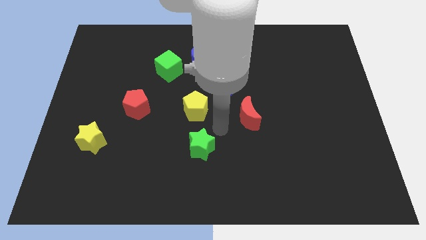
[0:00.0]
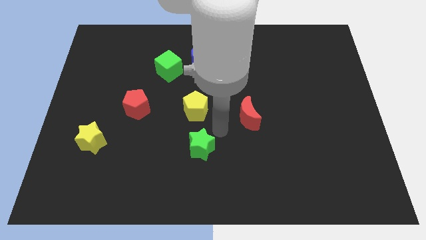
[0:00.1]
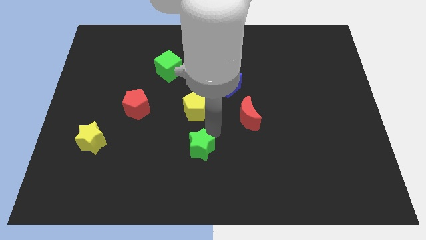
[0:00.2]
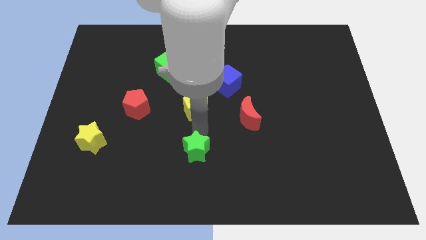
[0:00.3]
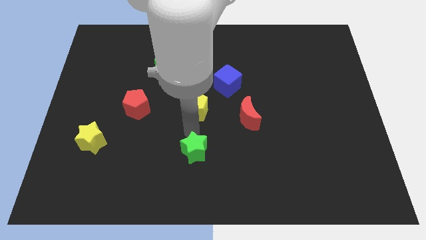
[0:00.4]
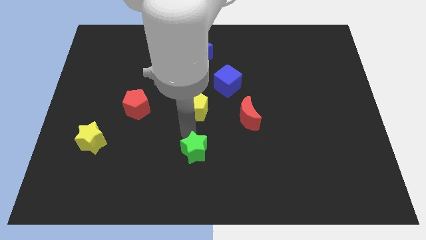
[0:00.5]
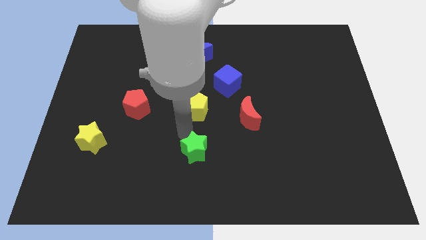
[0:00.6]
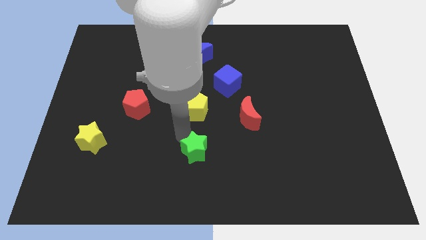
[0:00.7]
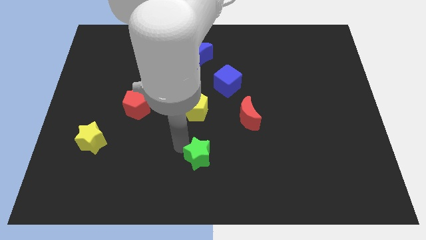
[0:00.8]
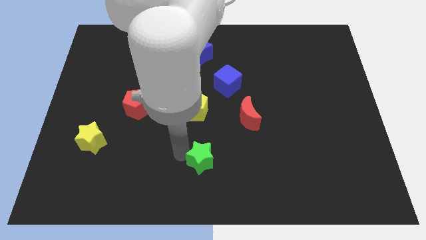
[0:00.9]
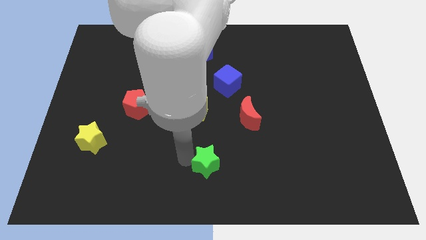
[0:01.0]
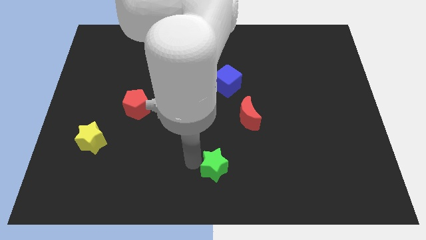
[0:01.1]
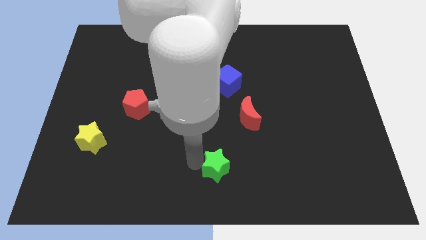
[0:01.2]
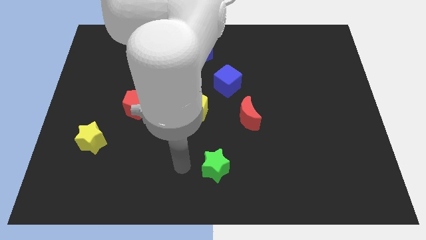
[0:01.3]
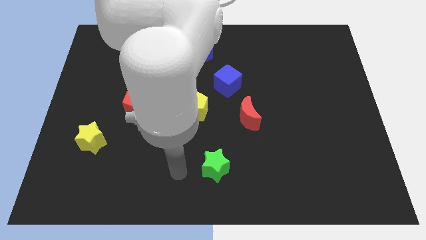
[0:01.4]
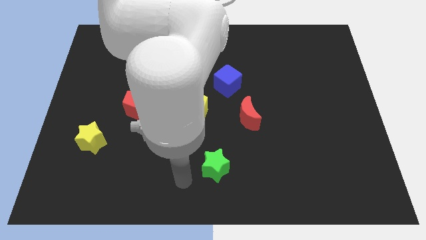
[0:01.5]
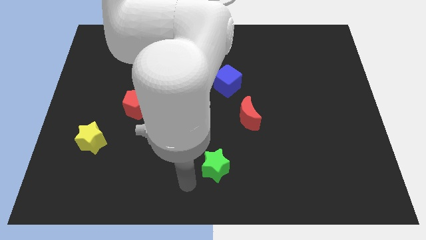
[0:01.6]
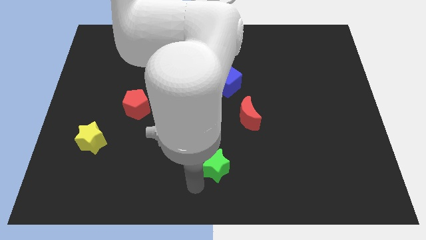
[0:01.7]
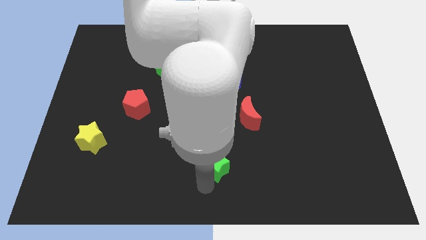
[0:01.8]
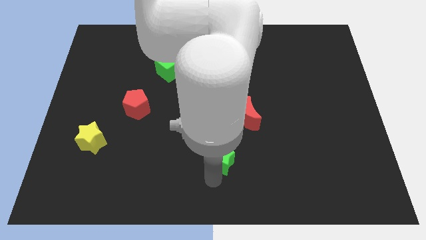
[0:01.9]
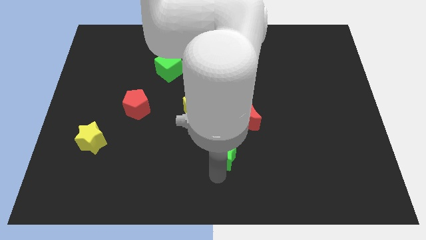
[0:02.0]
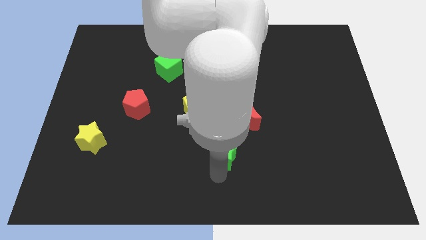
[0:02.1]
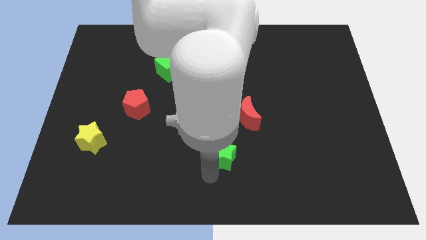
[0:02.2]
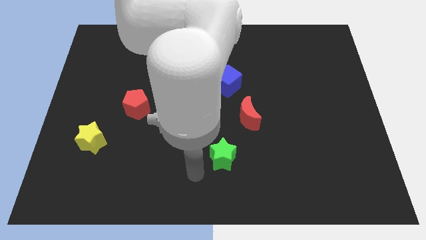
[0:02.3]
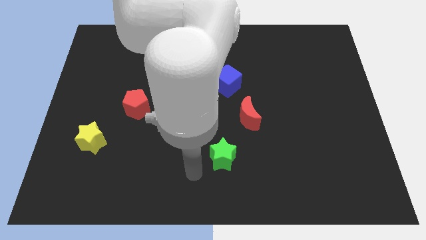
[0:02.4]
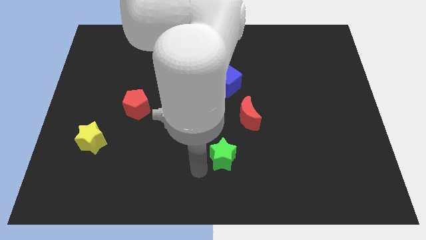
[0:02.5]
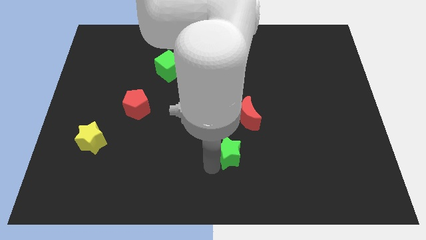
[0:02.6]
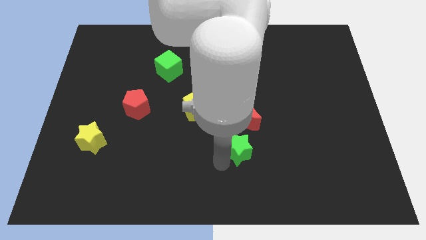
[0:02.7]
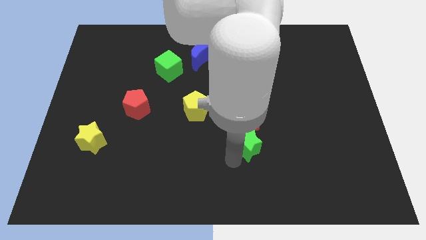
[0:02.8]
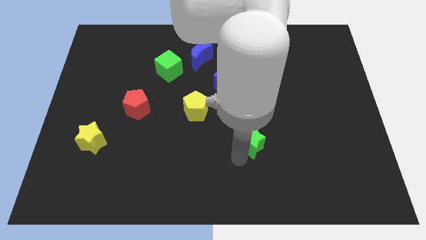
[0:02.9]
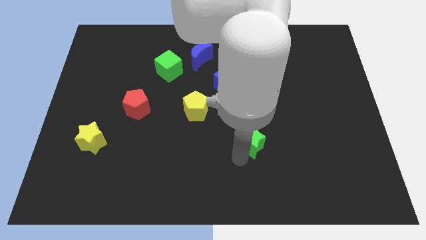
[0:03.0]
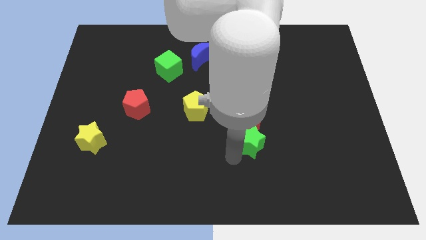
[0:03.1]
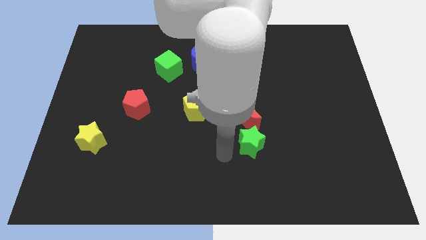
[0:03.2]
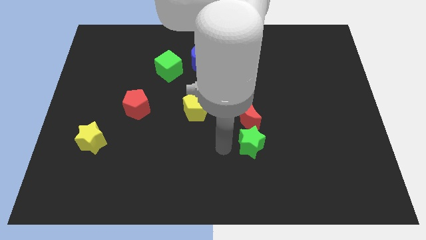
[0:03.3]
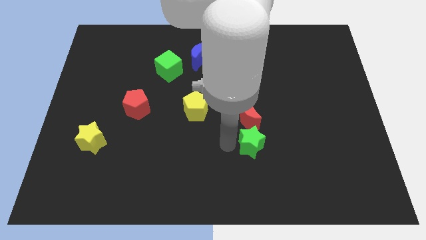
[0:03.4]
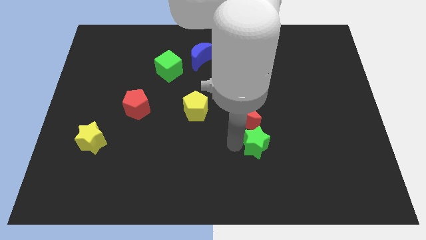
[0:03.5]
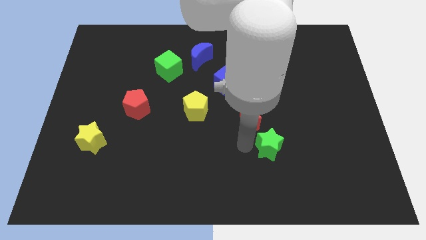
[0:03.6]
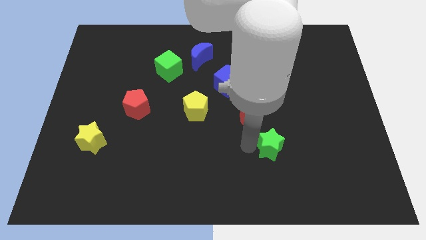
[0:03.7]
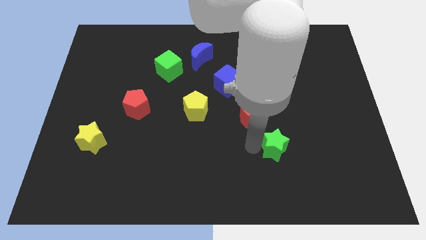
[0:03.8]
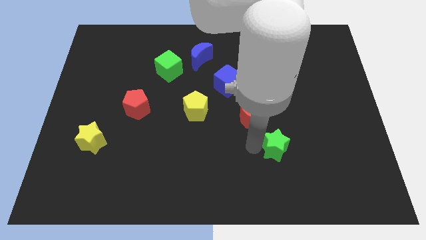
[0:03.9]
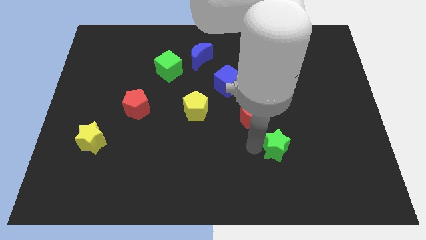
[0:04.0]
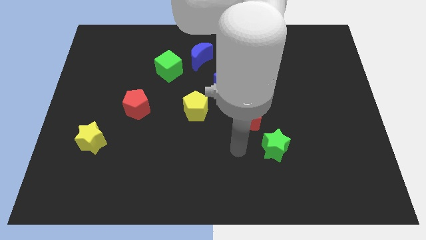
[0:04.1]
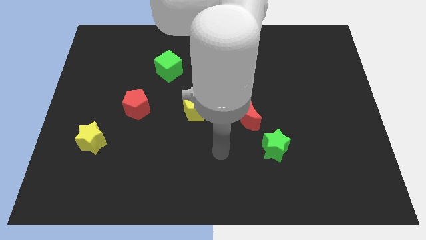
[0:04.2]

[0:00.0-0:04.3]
move the green star to the bottom right side of the red moon

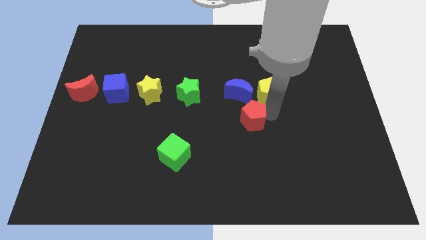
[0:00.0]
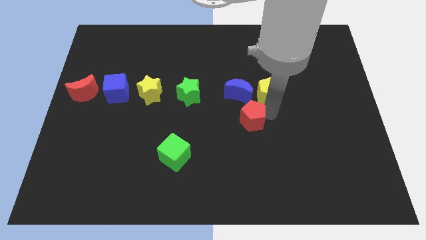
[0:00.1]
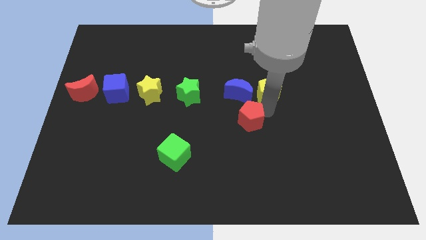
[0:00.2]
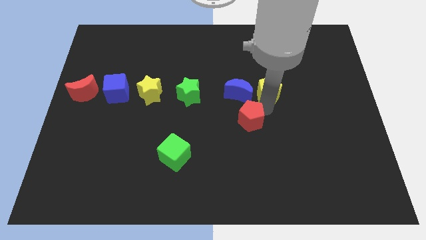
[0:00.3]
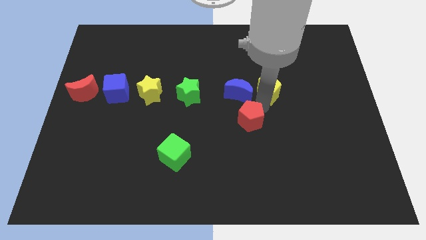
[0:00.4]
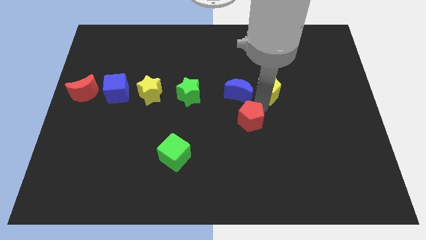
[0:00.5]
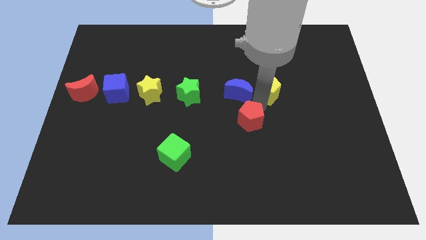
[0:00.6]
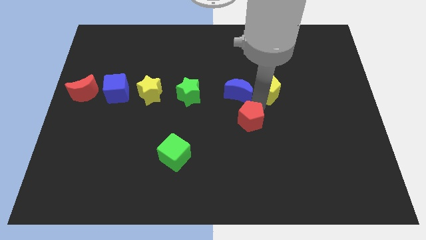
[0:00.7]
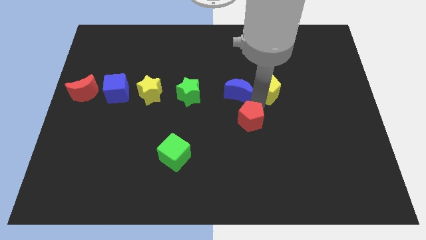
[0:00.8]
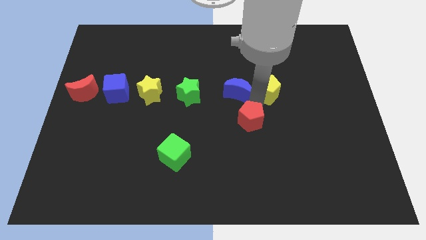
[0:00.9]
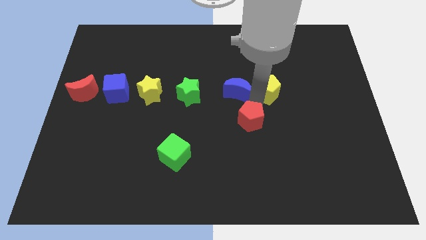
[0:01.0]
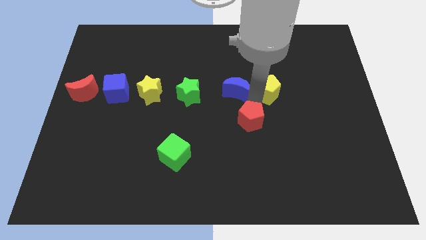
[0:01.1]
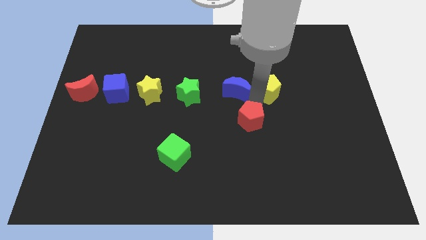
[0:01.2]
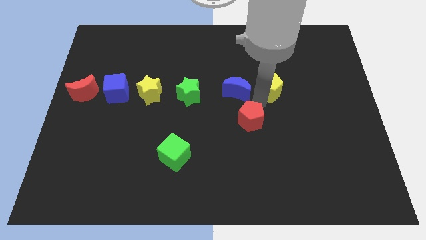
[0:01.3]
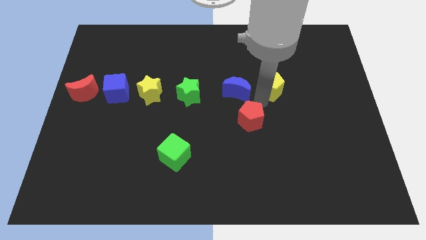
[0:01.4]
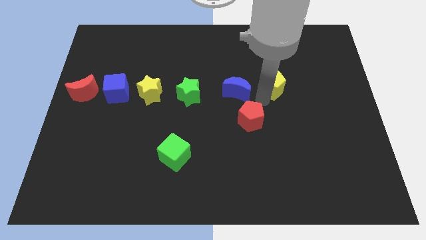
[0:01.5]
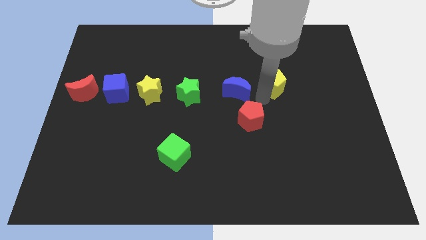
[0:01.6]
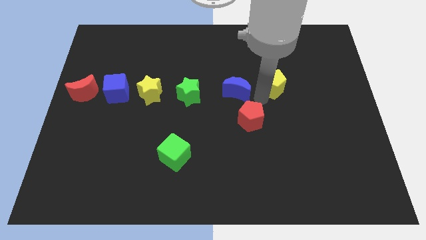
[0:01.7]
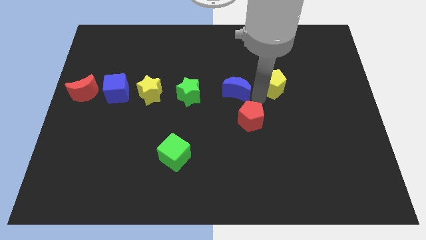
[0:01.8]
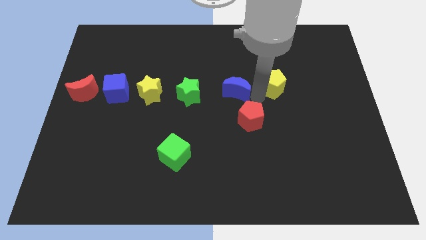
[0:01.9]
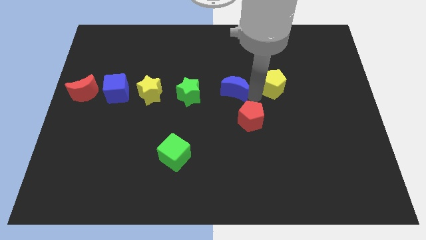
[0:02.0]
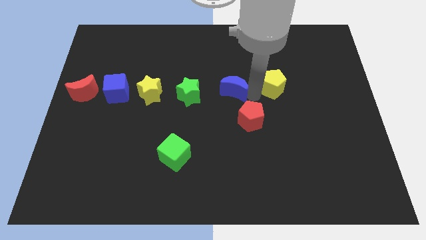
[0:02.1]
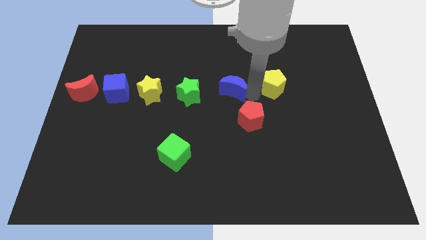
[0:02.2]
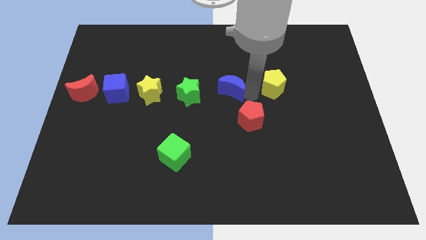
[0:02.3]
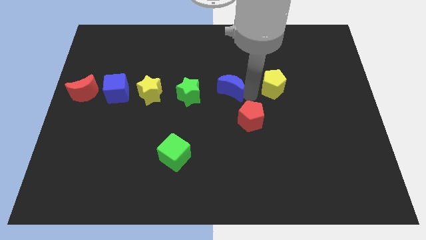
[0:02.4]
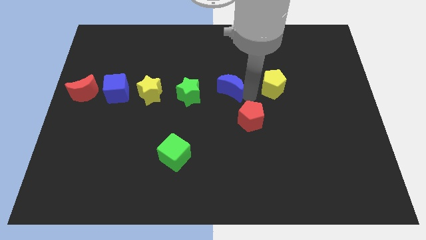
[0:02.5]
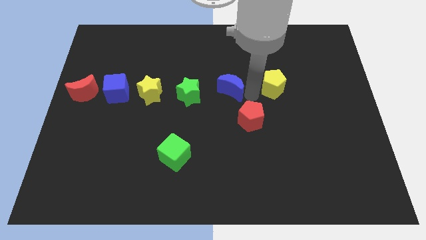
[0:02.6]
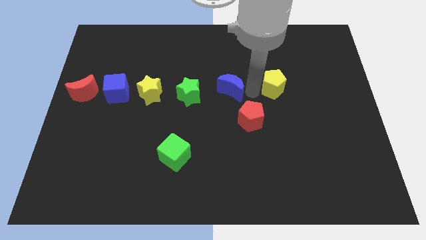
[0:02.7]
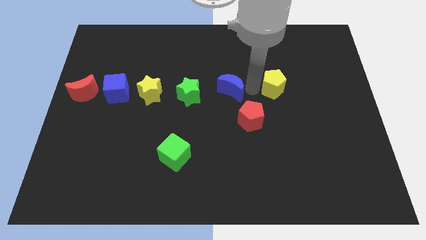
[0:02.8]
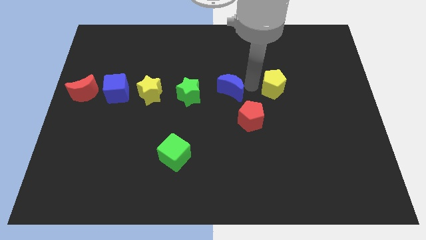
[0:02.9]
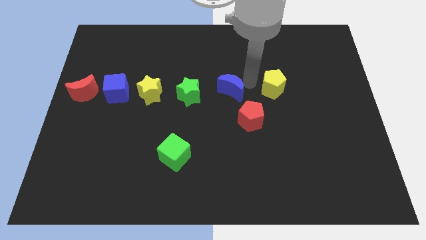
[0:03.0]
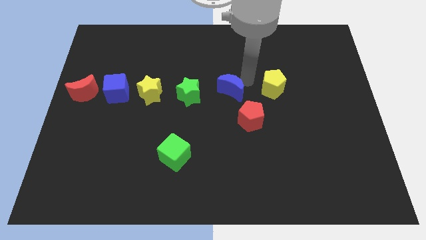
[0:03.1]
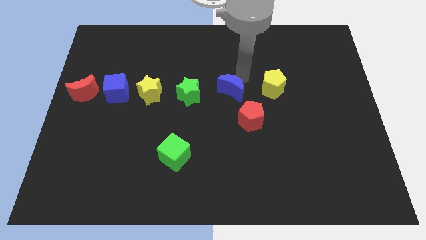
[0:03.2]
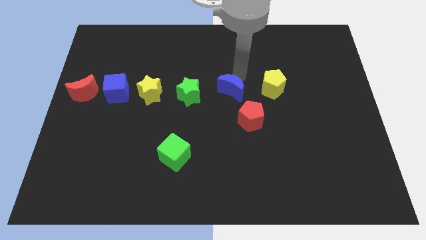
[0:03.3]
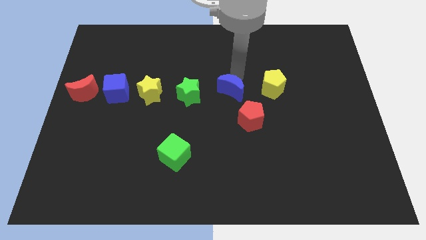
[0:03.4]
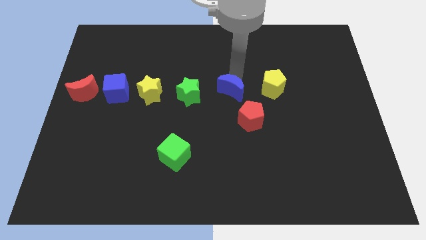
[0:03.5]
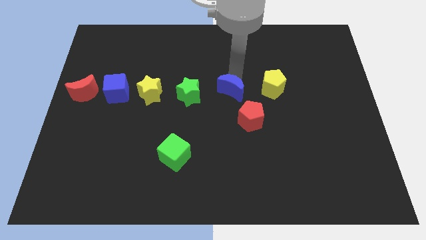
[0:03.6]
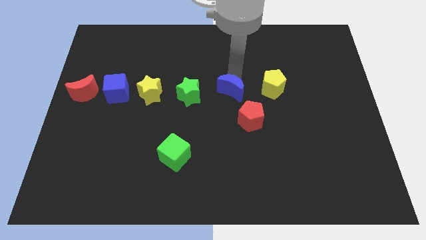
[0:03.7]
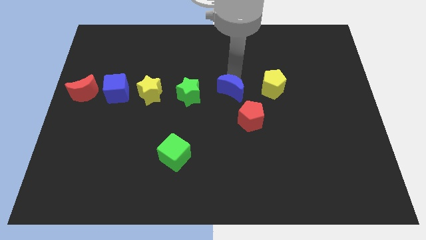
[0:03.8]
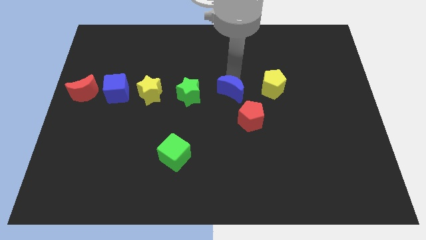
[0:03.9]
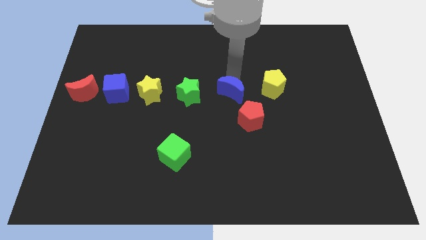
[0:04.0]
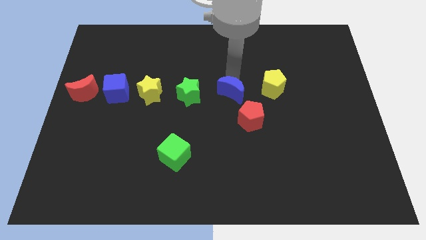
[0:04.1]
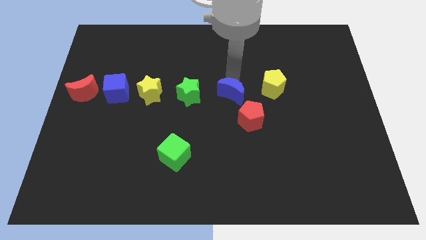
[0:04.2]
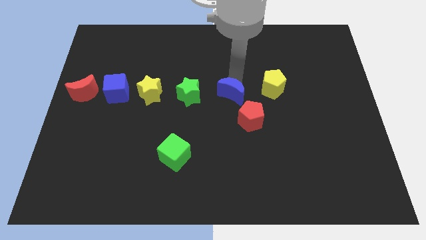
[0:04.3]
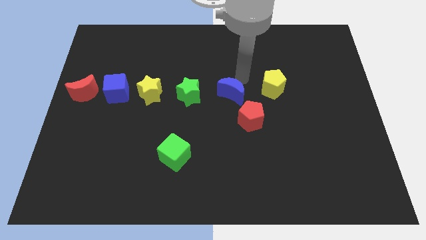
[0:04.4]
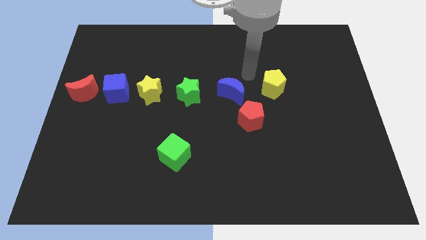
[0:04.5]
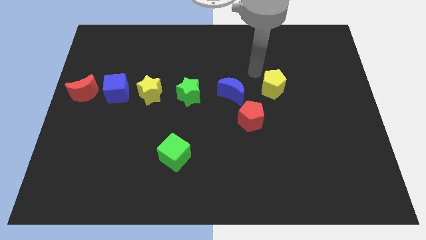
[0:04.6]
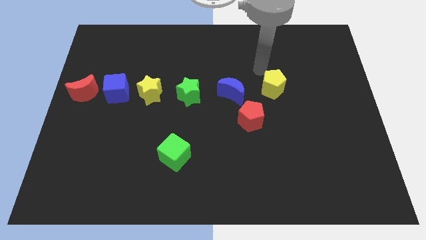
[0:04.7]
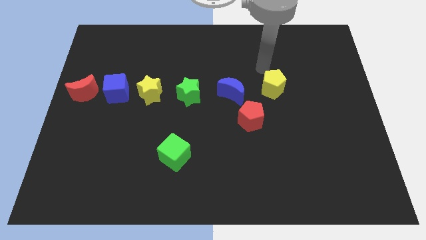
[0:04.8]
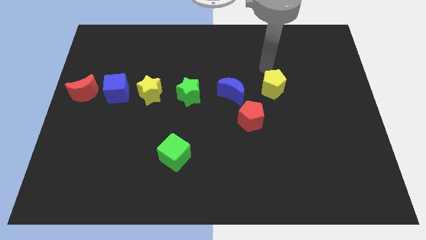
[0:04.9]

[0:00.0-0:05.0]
adjust the blue moon to the right of green star at the center
